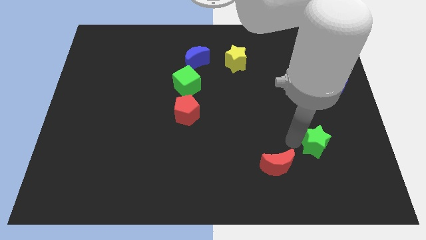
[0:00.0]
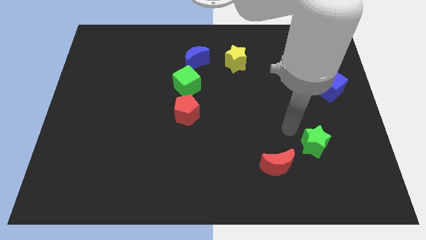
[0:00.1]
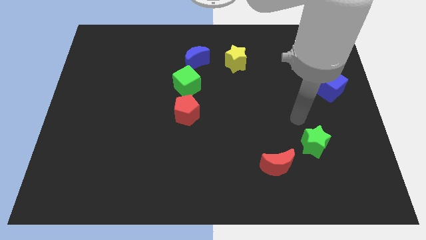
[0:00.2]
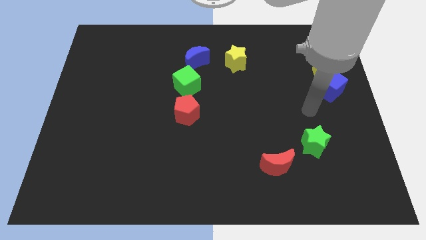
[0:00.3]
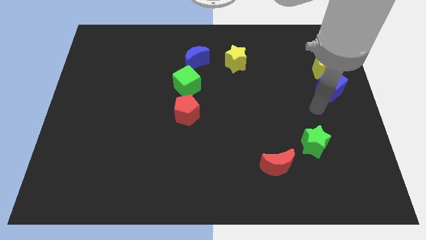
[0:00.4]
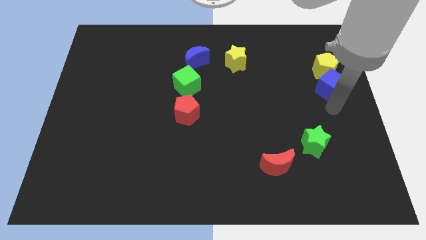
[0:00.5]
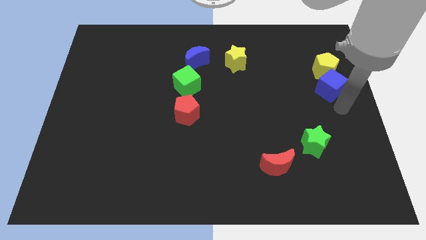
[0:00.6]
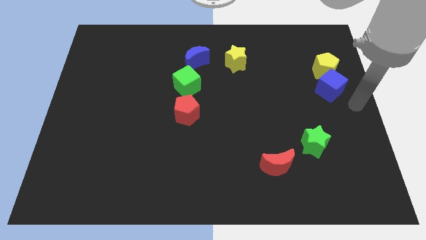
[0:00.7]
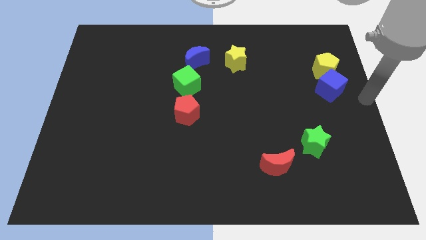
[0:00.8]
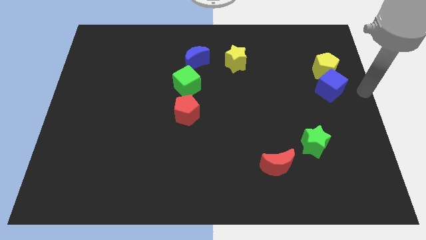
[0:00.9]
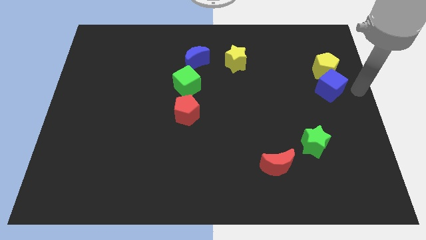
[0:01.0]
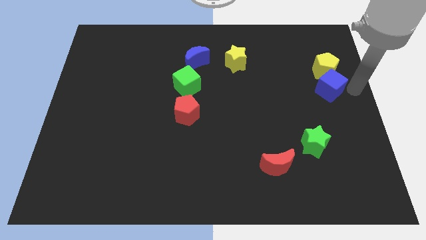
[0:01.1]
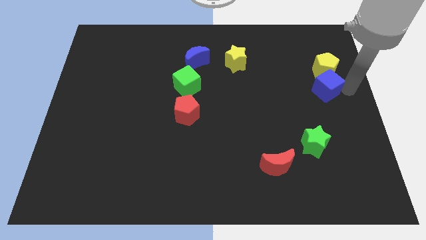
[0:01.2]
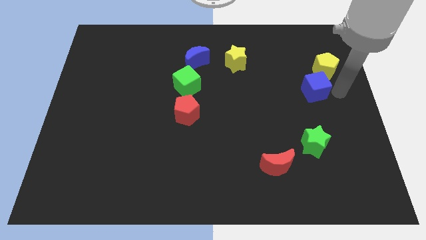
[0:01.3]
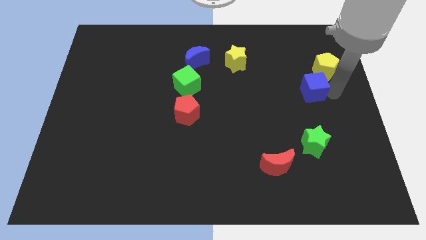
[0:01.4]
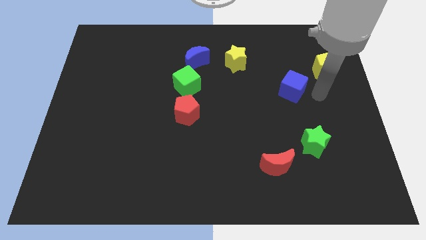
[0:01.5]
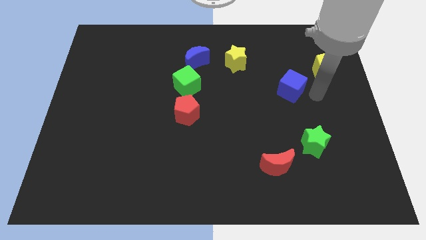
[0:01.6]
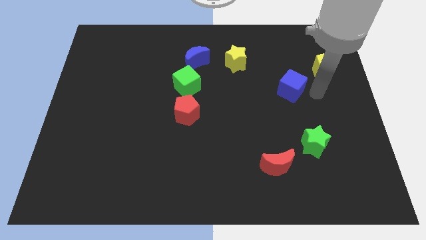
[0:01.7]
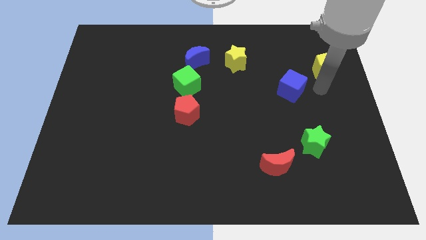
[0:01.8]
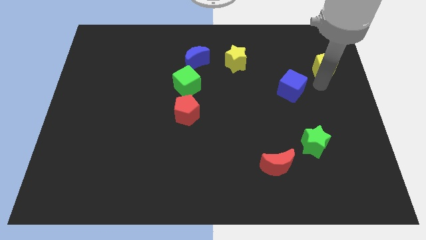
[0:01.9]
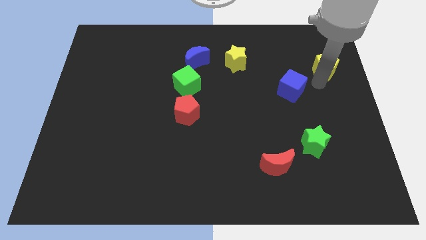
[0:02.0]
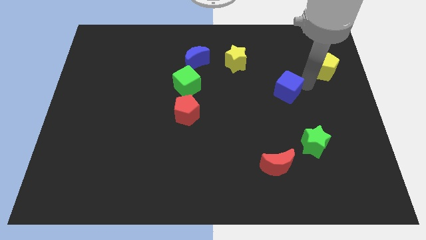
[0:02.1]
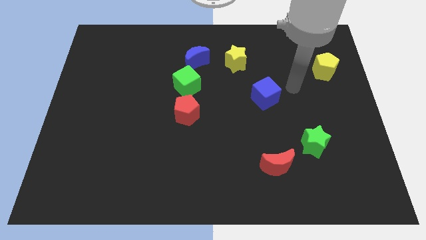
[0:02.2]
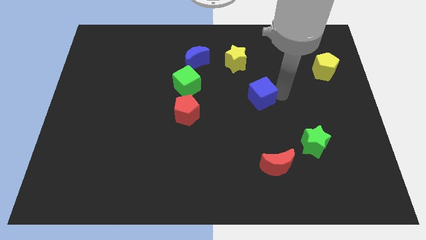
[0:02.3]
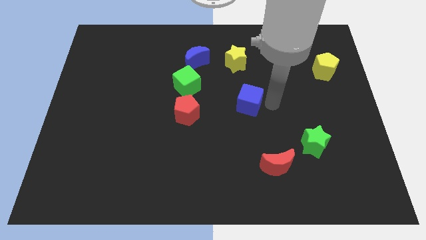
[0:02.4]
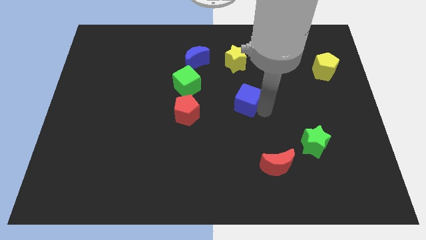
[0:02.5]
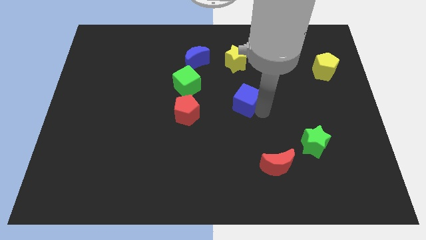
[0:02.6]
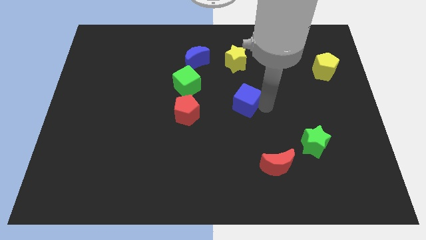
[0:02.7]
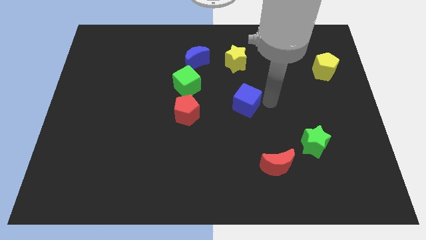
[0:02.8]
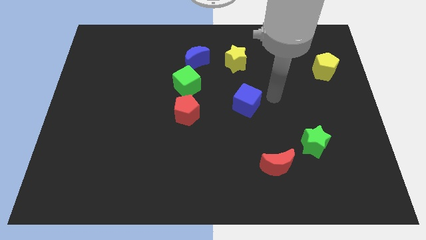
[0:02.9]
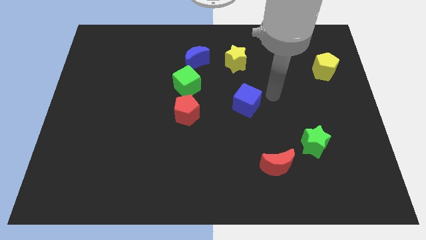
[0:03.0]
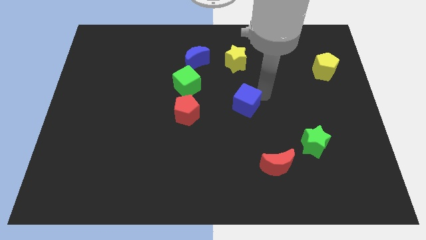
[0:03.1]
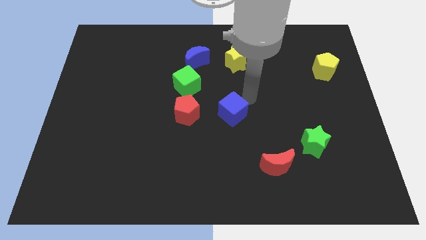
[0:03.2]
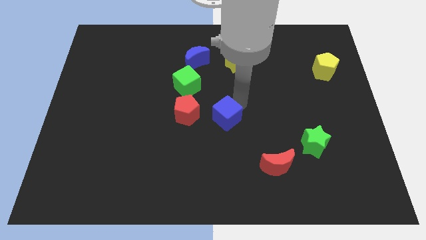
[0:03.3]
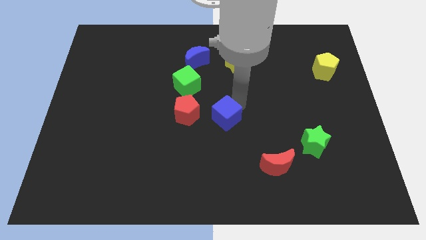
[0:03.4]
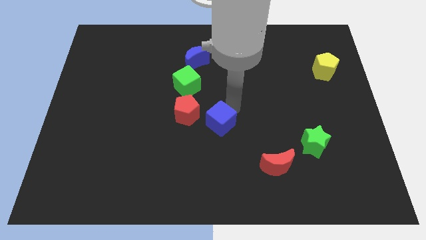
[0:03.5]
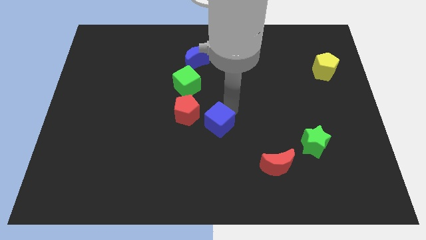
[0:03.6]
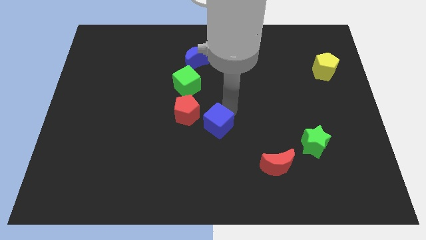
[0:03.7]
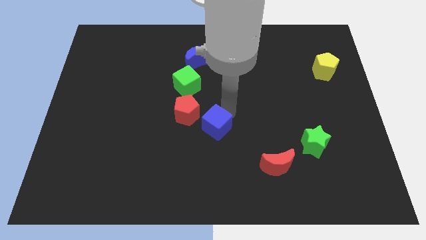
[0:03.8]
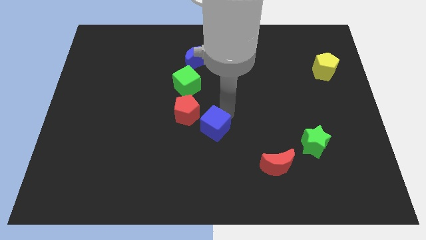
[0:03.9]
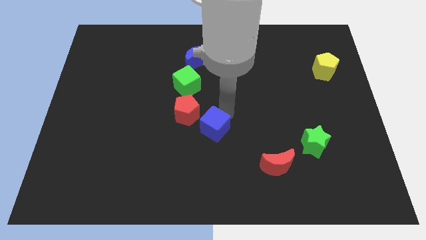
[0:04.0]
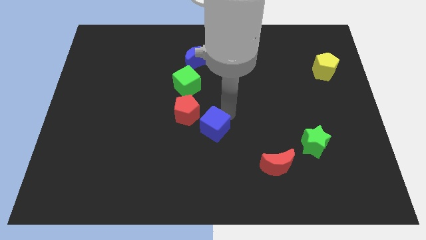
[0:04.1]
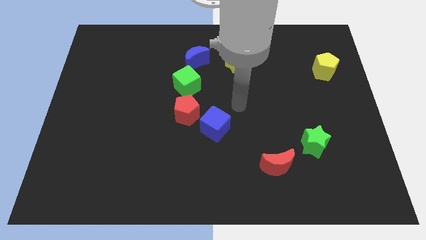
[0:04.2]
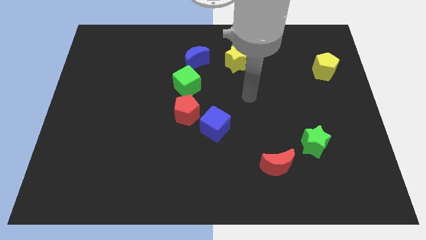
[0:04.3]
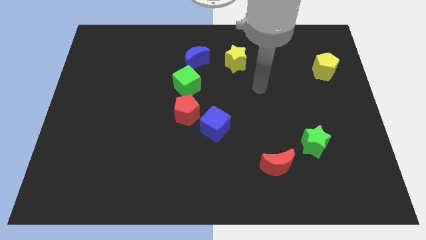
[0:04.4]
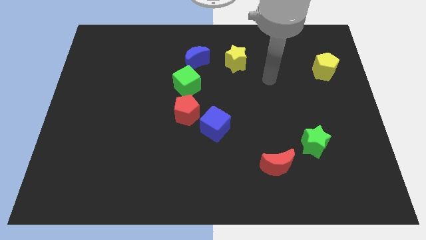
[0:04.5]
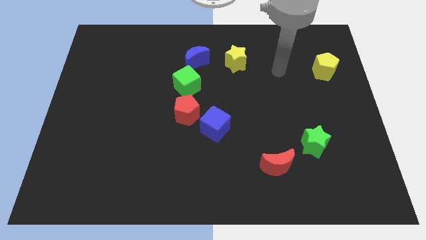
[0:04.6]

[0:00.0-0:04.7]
push the blue cube close to the red pentagon

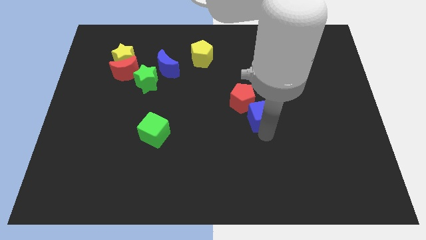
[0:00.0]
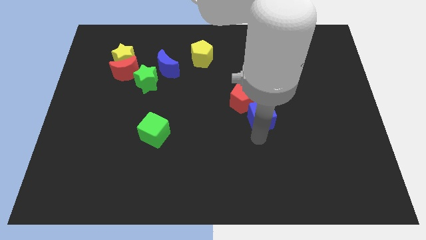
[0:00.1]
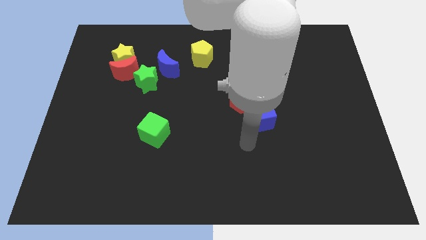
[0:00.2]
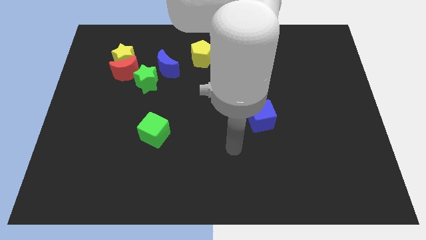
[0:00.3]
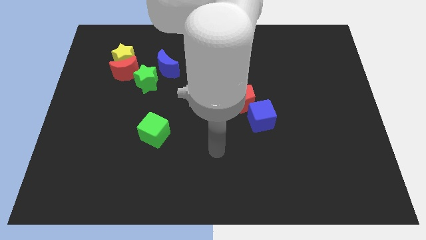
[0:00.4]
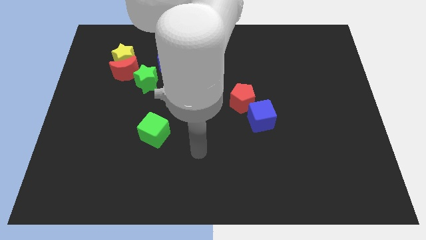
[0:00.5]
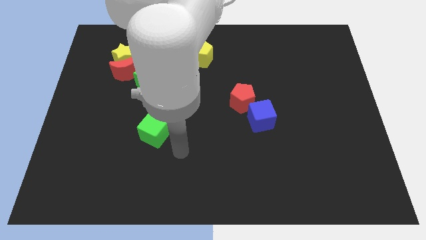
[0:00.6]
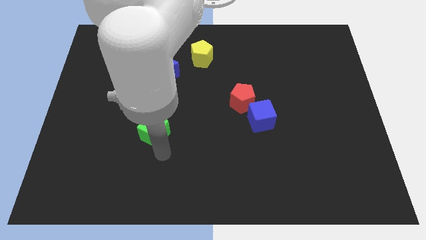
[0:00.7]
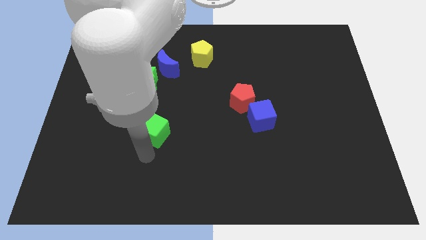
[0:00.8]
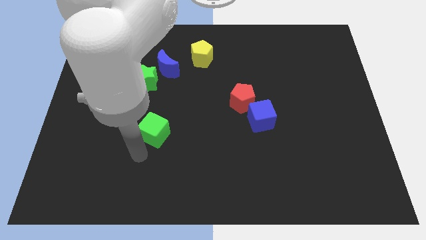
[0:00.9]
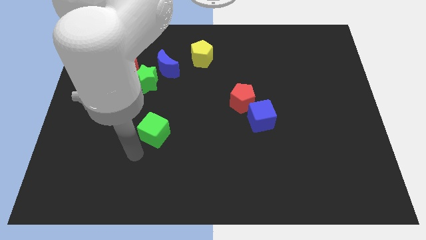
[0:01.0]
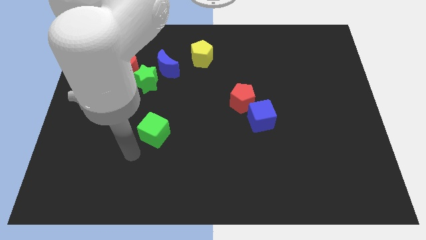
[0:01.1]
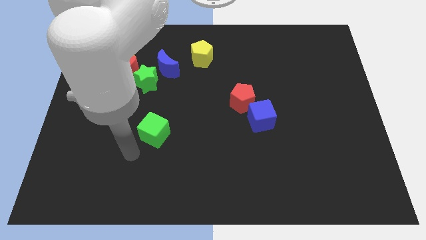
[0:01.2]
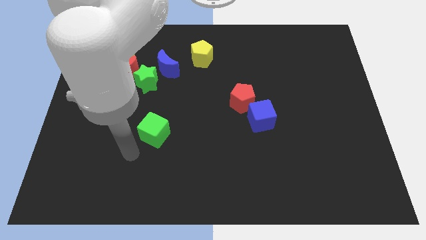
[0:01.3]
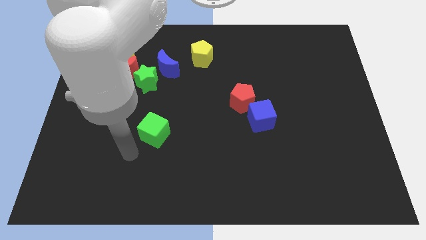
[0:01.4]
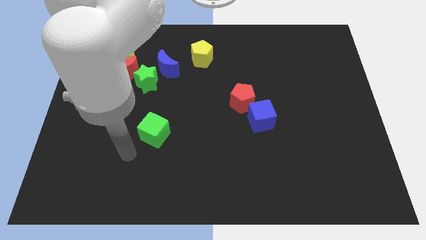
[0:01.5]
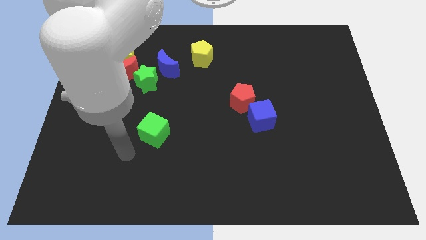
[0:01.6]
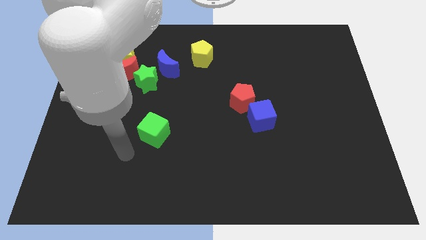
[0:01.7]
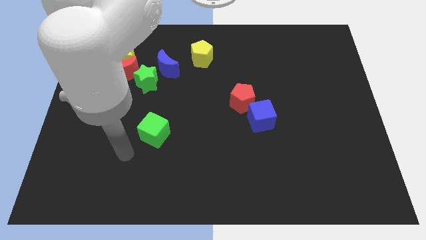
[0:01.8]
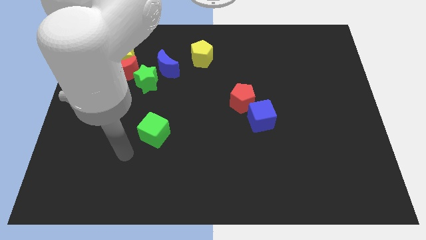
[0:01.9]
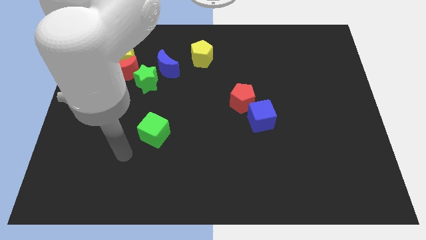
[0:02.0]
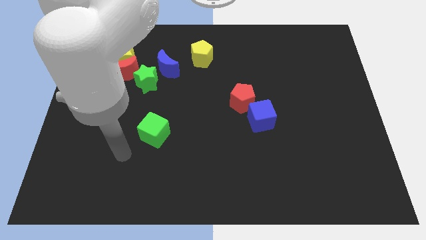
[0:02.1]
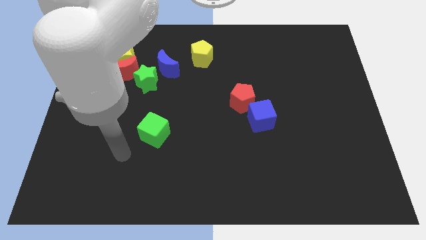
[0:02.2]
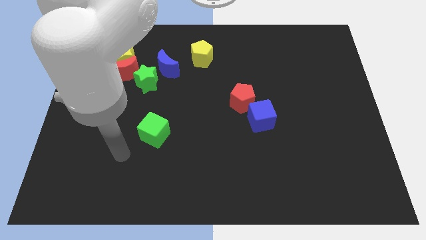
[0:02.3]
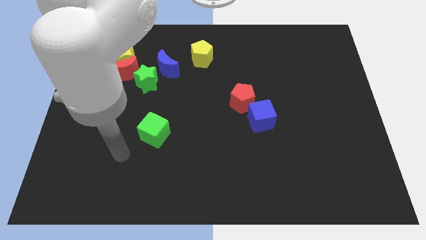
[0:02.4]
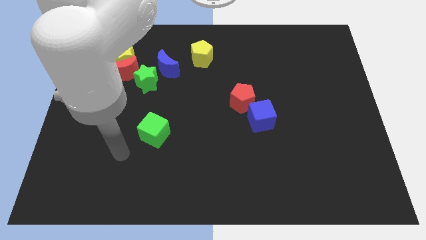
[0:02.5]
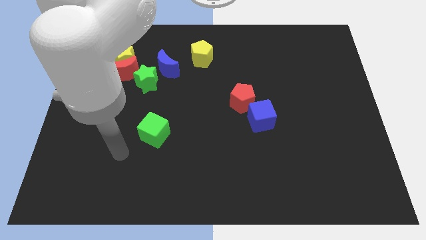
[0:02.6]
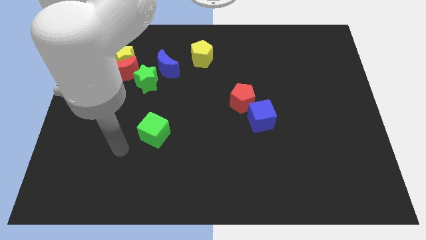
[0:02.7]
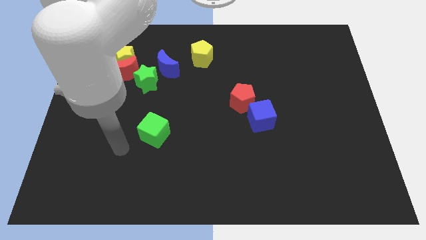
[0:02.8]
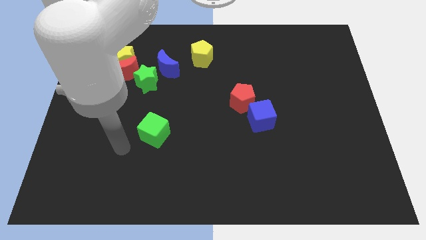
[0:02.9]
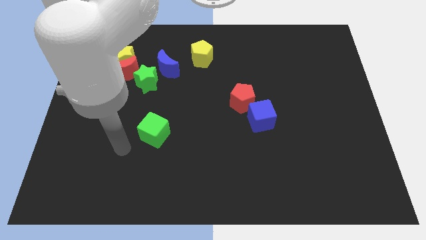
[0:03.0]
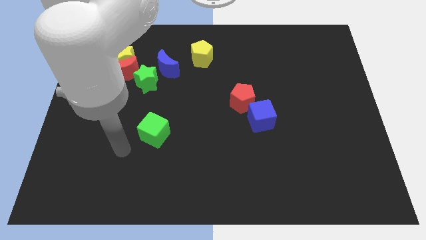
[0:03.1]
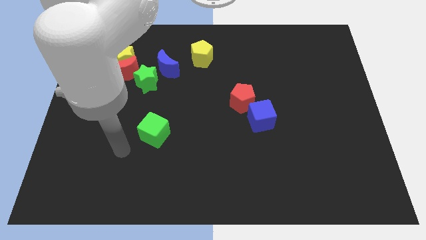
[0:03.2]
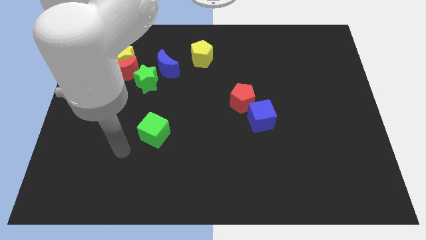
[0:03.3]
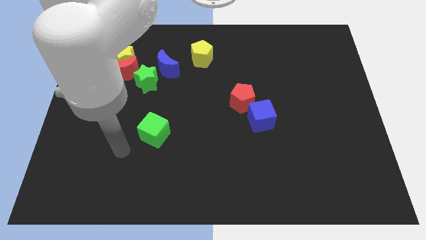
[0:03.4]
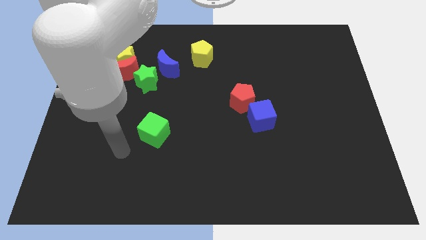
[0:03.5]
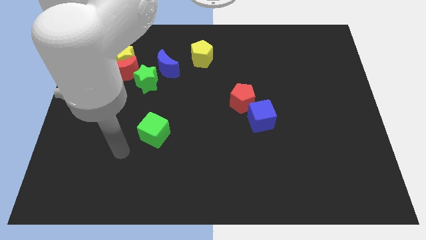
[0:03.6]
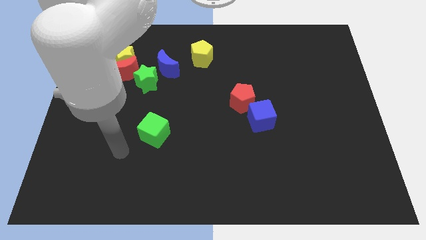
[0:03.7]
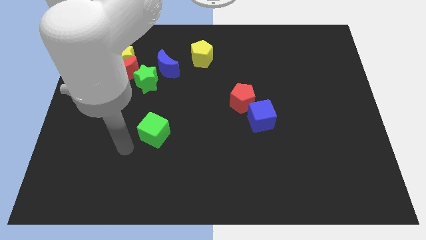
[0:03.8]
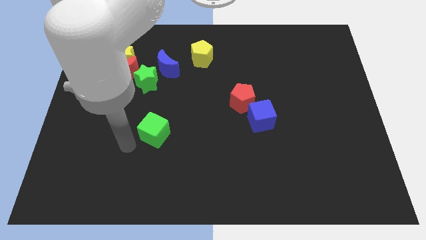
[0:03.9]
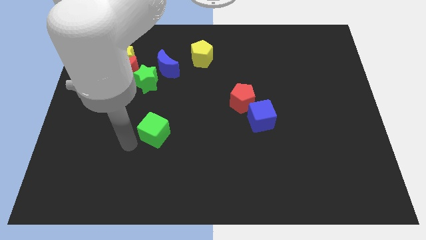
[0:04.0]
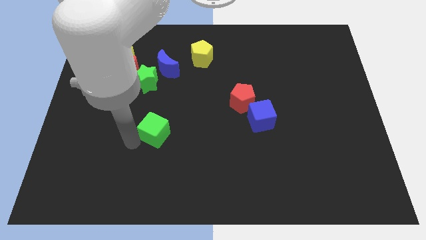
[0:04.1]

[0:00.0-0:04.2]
move the arm towards the green cube
